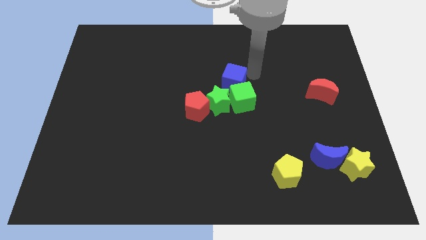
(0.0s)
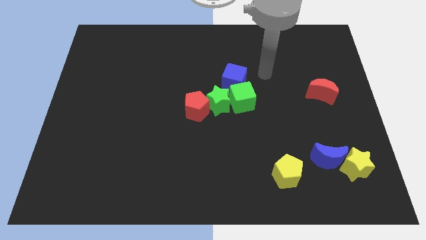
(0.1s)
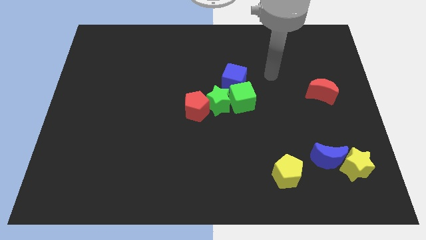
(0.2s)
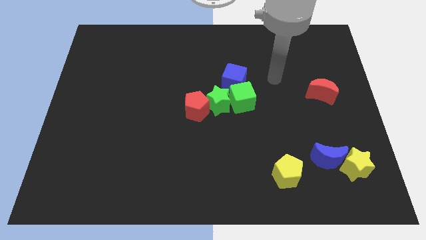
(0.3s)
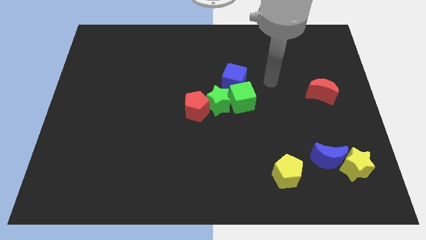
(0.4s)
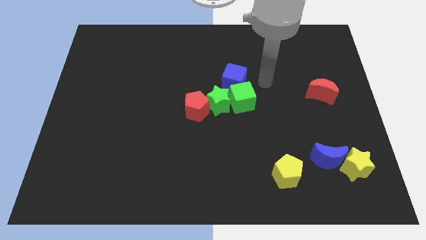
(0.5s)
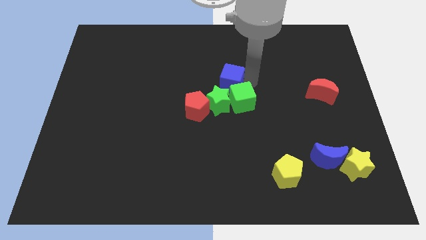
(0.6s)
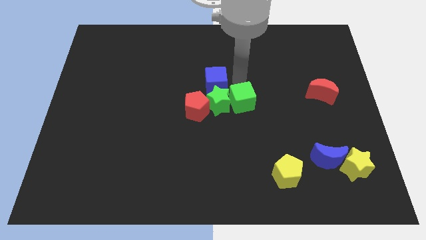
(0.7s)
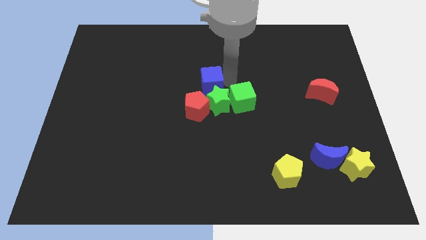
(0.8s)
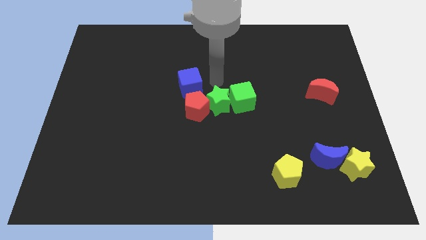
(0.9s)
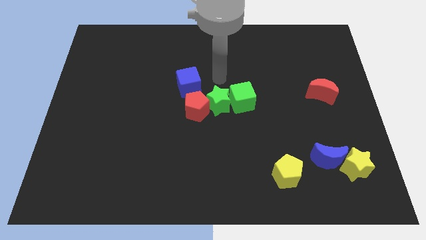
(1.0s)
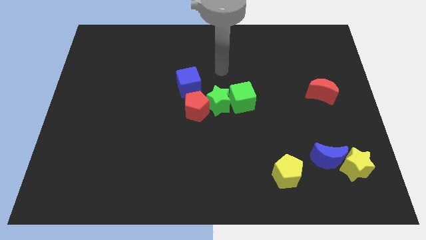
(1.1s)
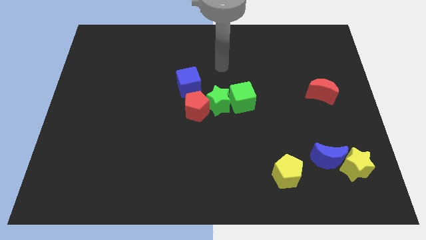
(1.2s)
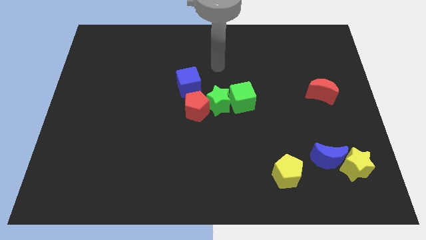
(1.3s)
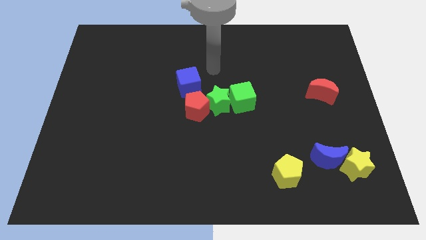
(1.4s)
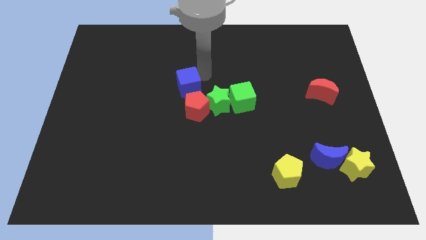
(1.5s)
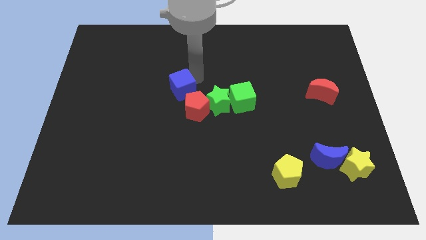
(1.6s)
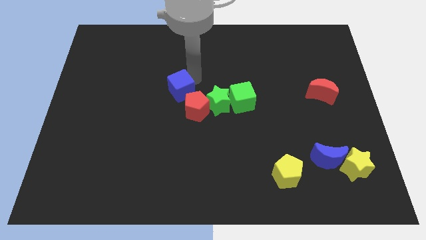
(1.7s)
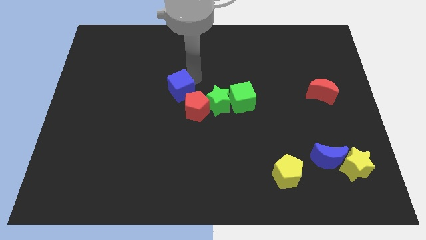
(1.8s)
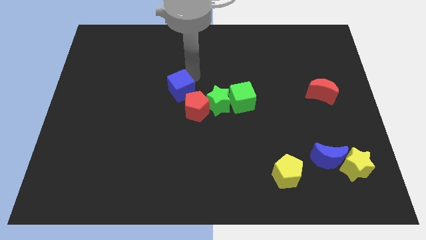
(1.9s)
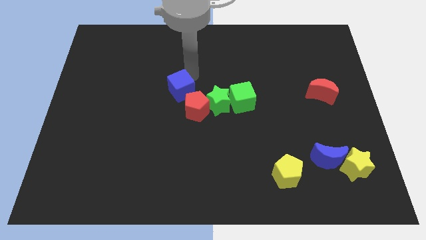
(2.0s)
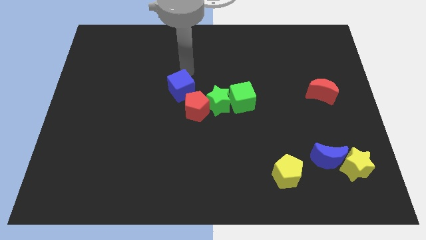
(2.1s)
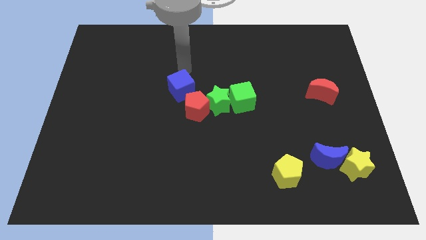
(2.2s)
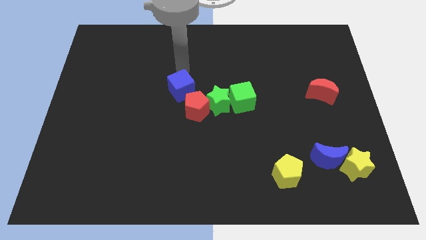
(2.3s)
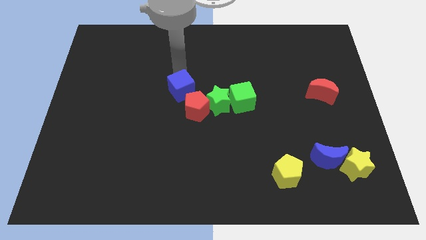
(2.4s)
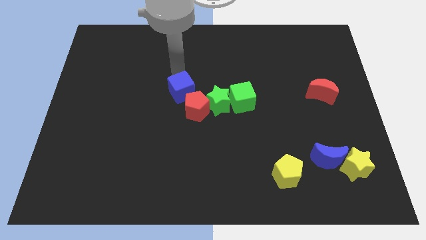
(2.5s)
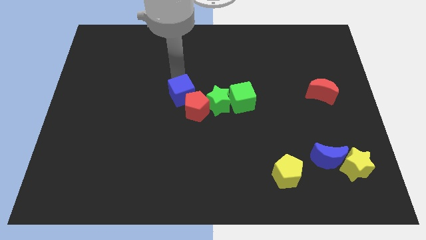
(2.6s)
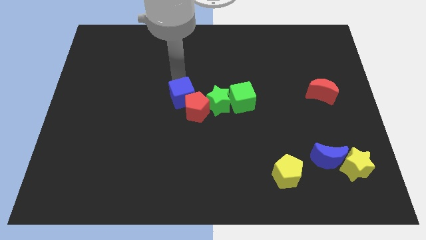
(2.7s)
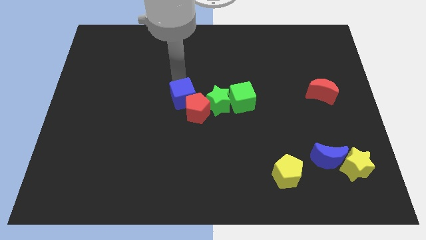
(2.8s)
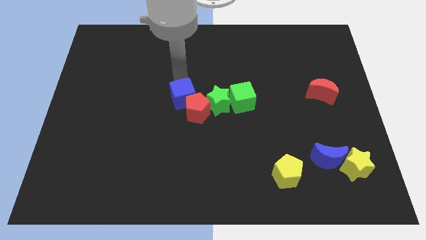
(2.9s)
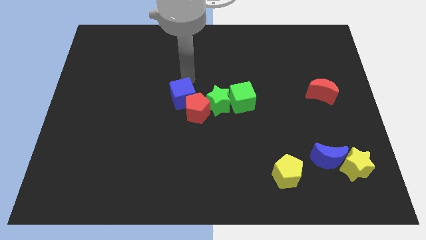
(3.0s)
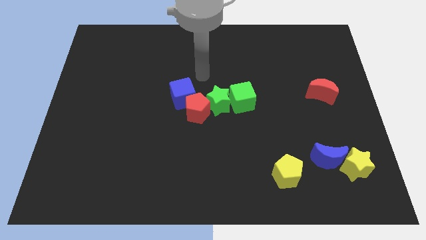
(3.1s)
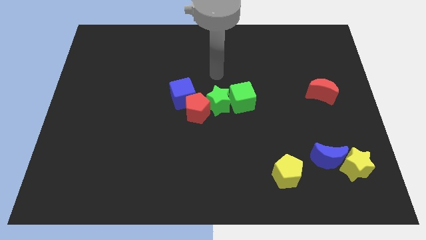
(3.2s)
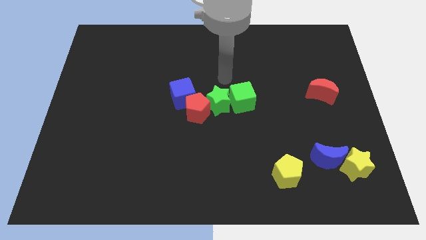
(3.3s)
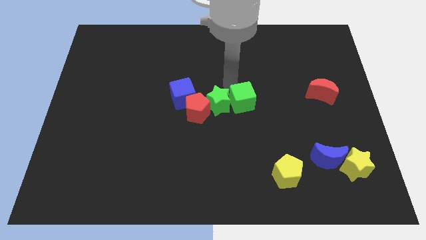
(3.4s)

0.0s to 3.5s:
move the blue cube into the red pentagon

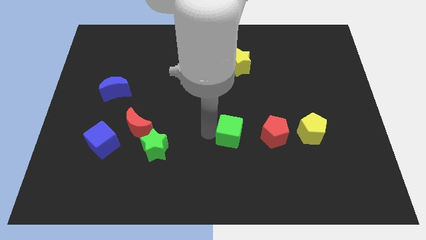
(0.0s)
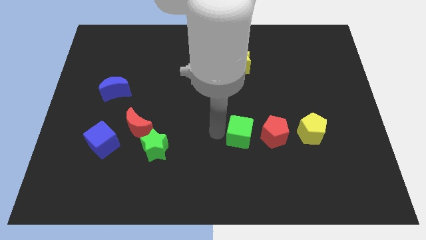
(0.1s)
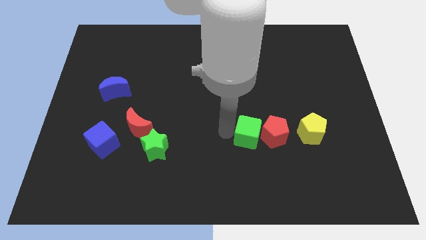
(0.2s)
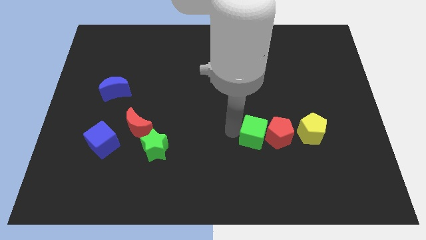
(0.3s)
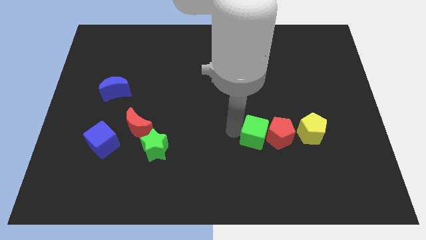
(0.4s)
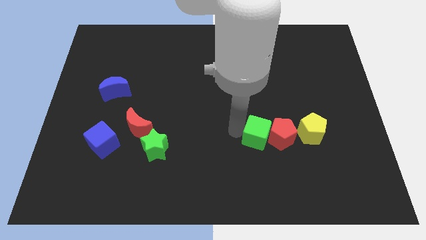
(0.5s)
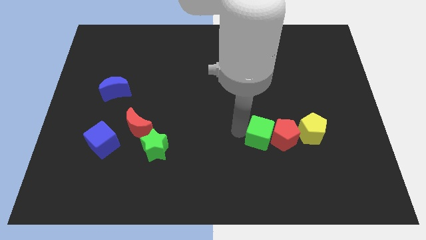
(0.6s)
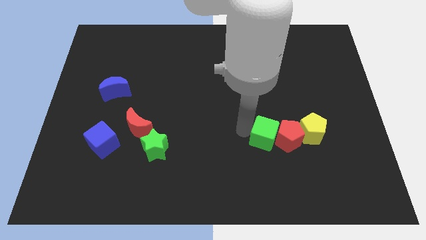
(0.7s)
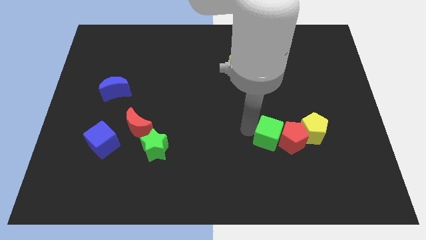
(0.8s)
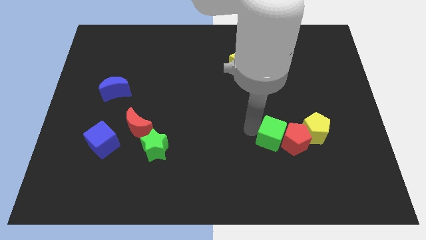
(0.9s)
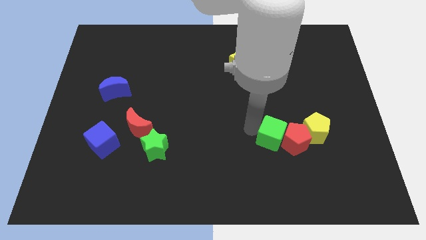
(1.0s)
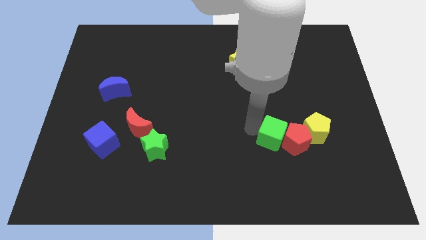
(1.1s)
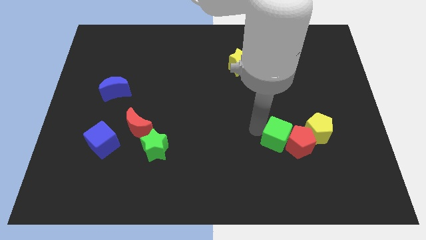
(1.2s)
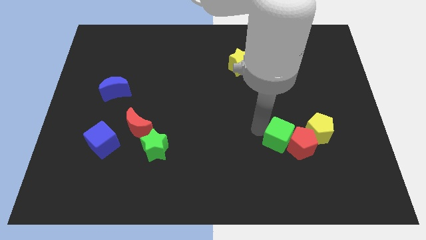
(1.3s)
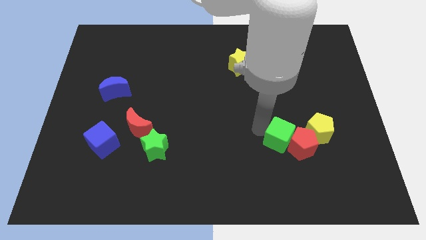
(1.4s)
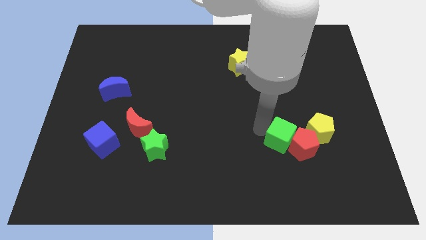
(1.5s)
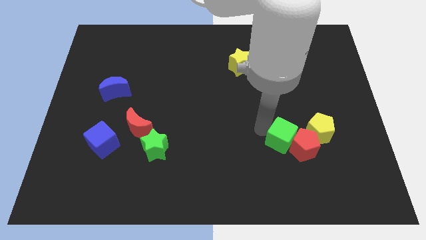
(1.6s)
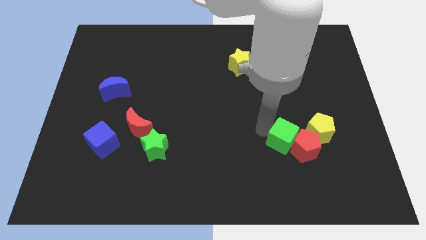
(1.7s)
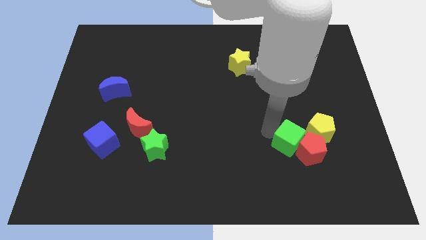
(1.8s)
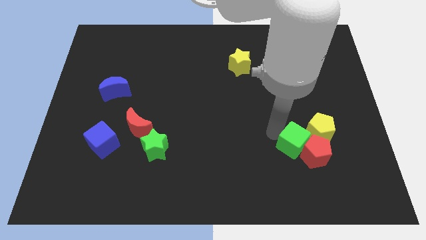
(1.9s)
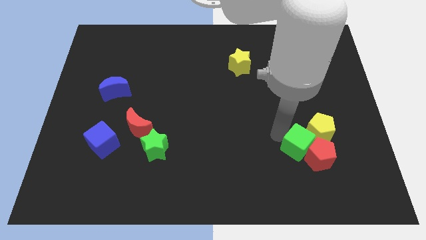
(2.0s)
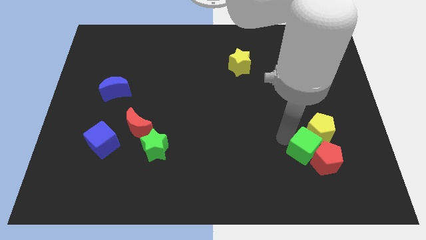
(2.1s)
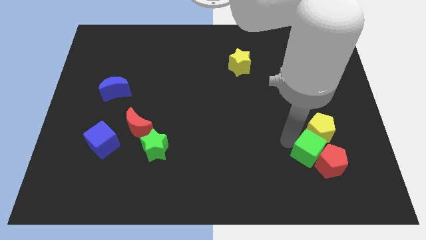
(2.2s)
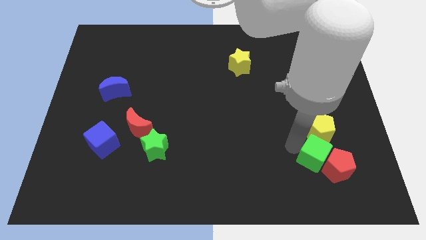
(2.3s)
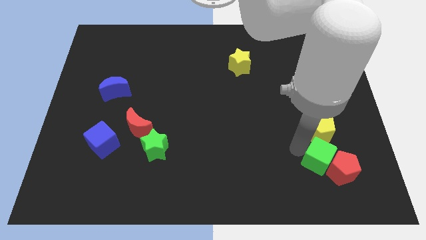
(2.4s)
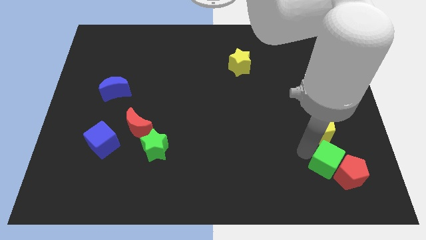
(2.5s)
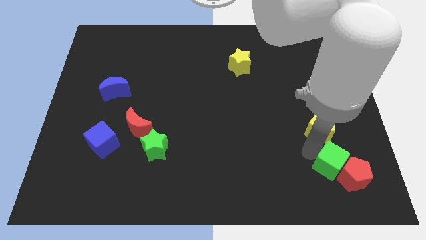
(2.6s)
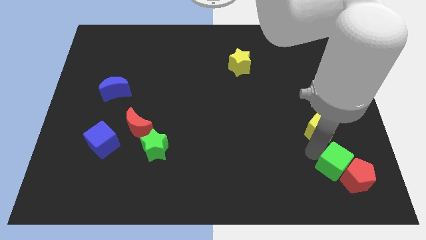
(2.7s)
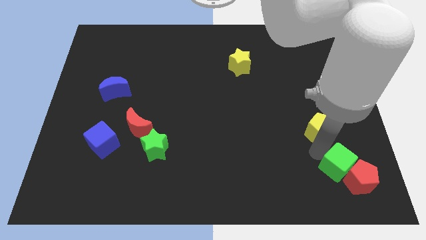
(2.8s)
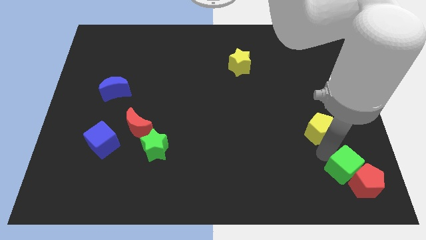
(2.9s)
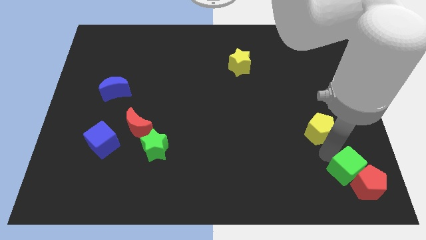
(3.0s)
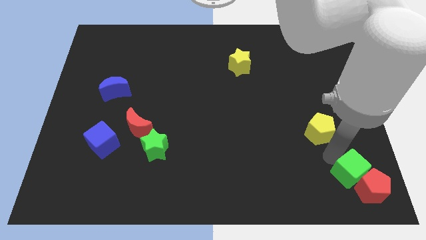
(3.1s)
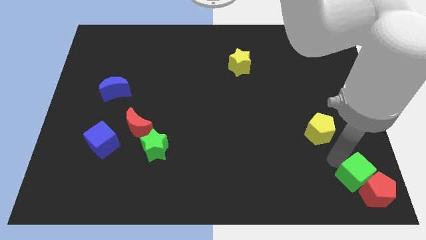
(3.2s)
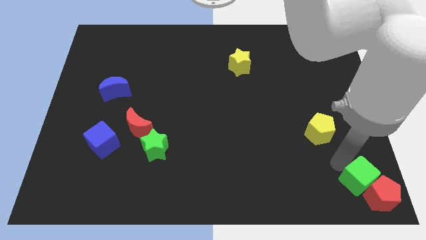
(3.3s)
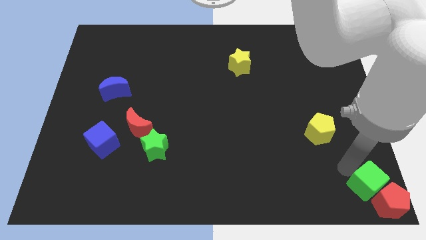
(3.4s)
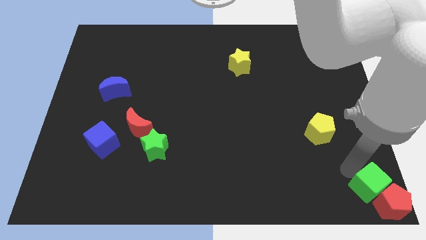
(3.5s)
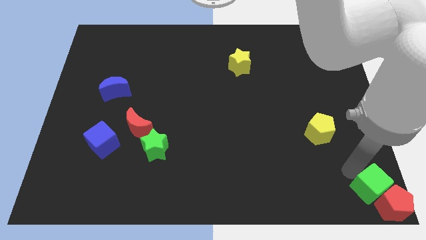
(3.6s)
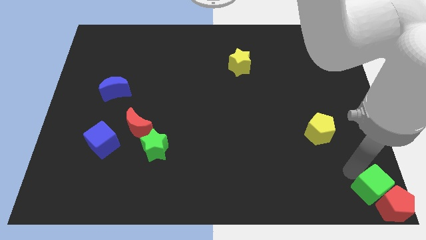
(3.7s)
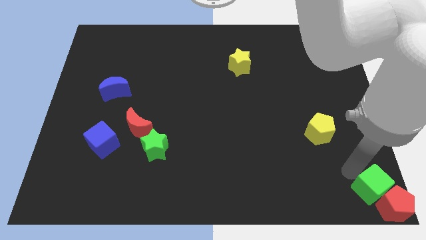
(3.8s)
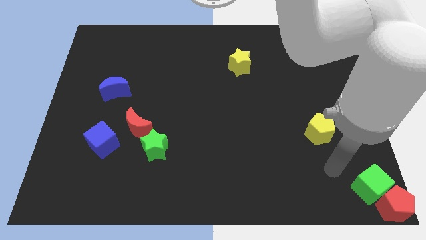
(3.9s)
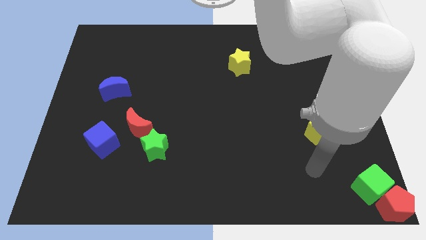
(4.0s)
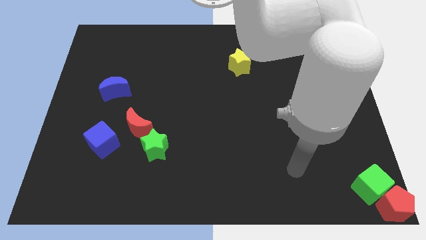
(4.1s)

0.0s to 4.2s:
place the red pentagon and green cube at the bottom right corner of the board

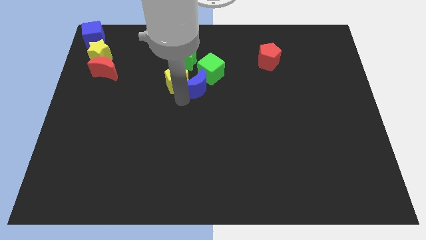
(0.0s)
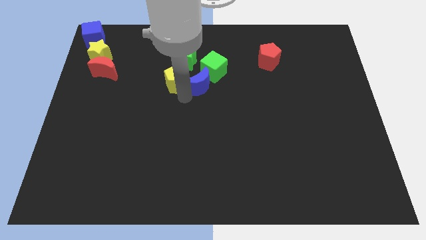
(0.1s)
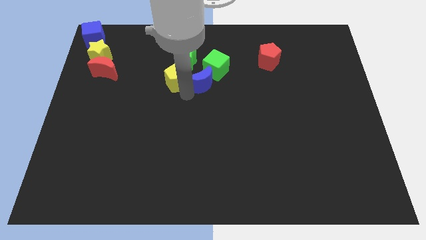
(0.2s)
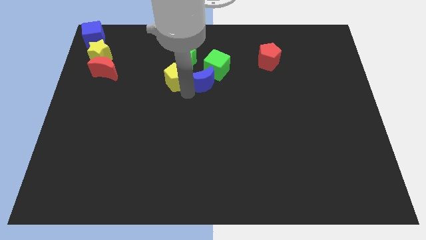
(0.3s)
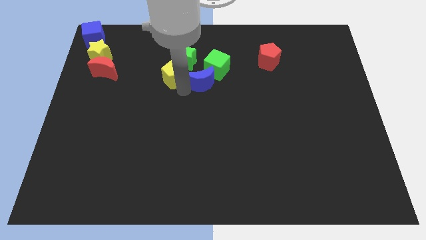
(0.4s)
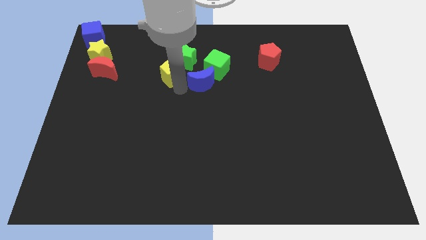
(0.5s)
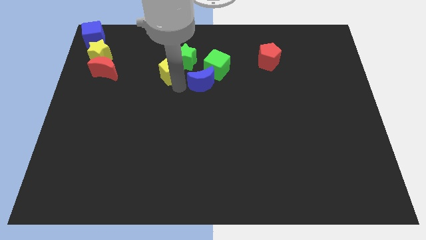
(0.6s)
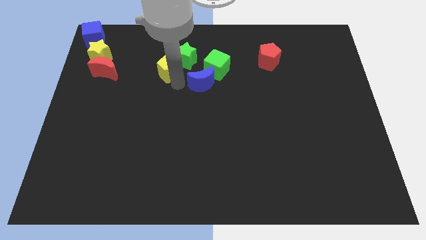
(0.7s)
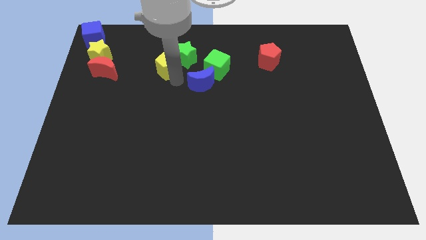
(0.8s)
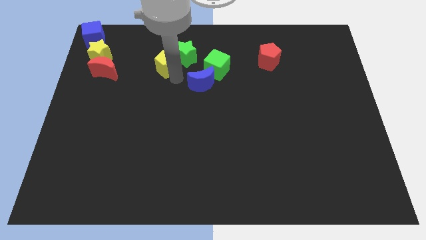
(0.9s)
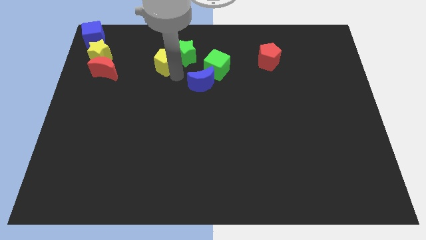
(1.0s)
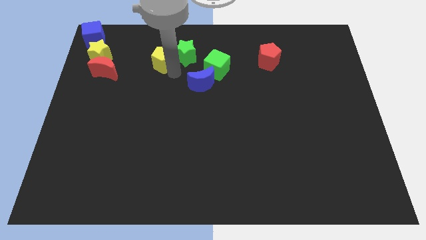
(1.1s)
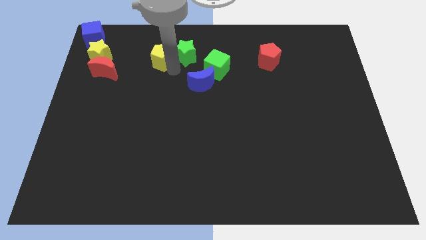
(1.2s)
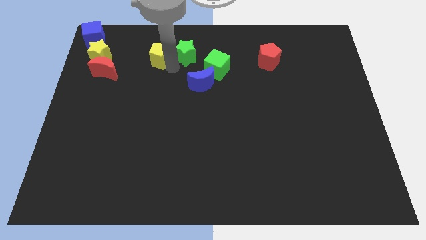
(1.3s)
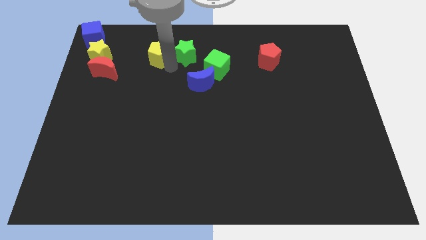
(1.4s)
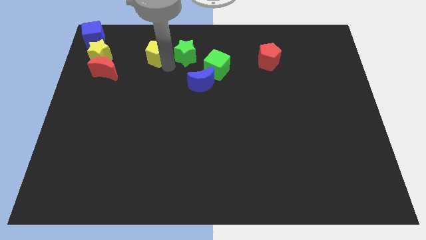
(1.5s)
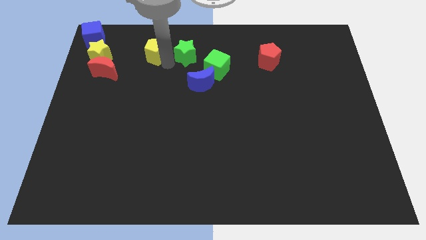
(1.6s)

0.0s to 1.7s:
move the yellow pentagon to the left side of the green star
